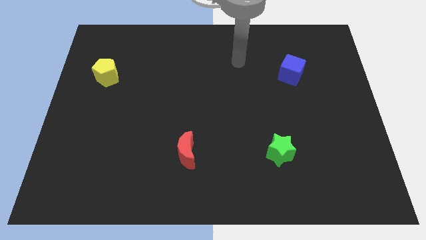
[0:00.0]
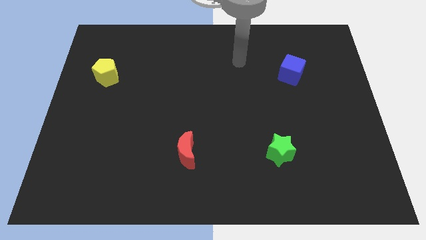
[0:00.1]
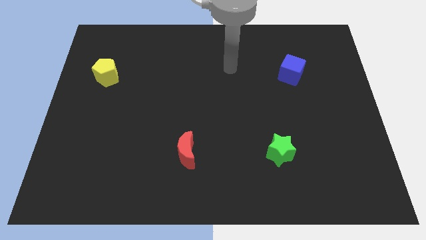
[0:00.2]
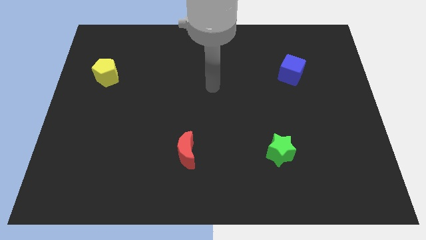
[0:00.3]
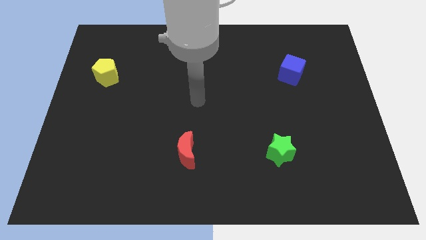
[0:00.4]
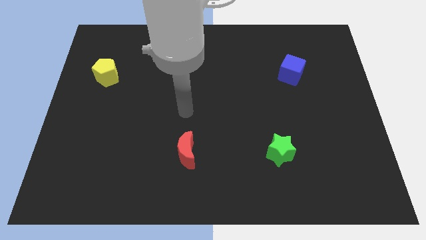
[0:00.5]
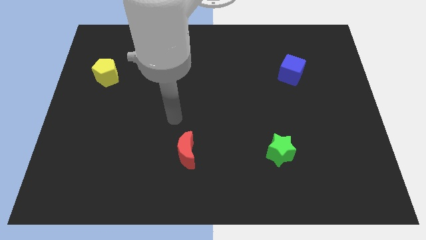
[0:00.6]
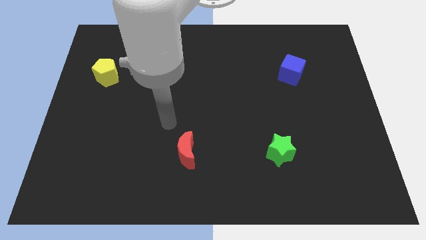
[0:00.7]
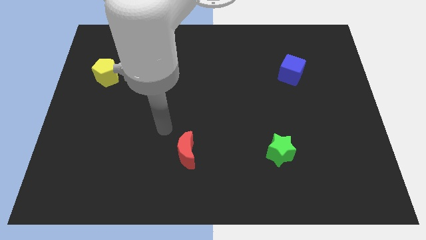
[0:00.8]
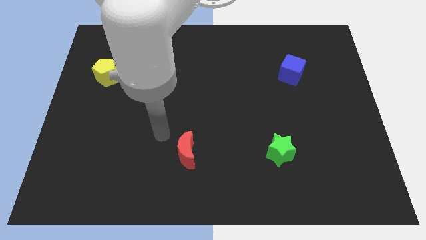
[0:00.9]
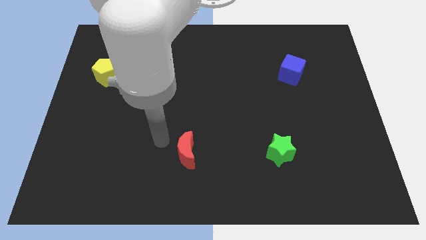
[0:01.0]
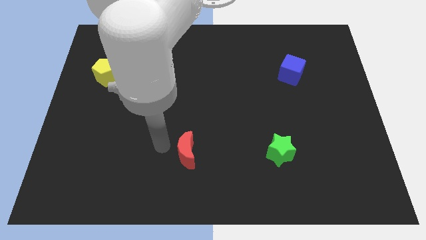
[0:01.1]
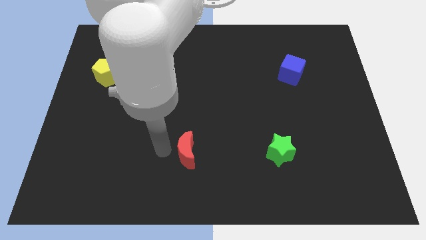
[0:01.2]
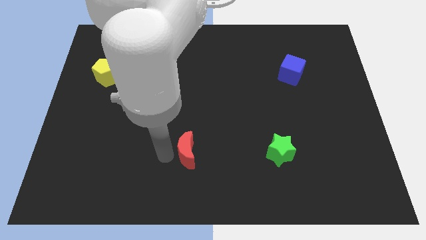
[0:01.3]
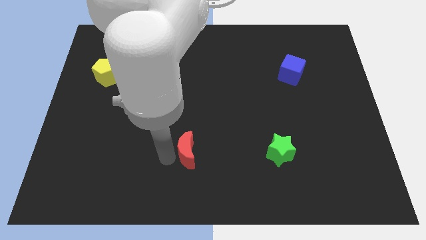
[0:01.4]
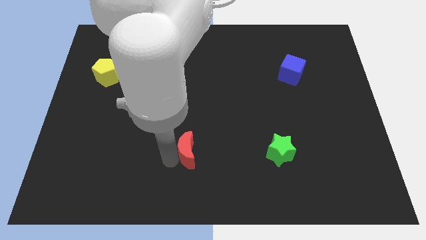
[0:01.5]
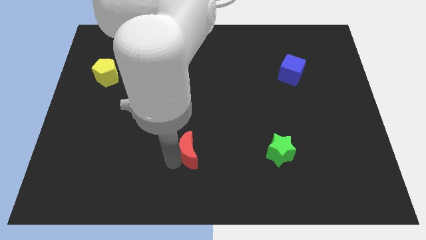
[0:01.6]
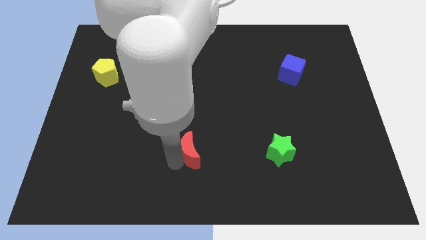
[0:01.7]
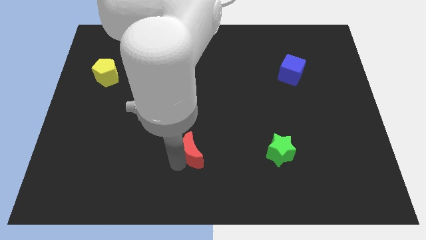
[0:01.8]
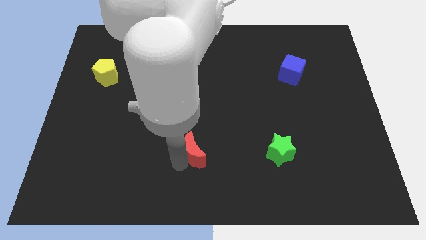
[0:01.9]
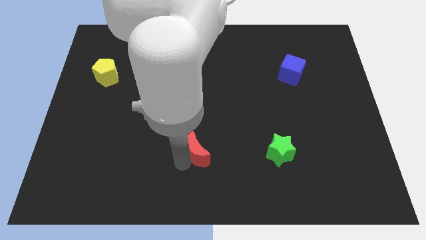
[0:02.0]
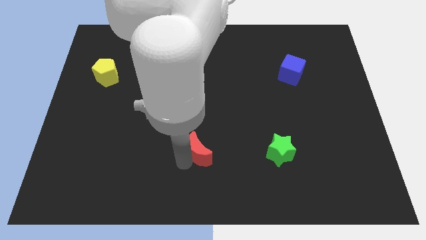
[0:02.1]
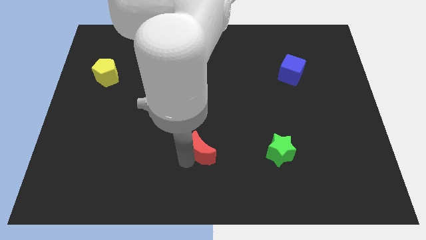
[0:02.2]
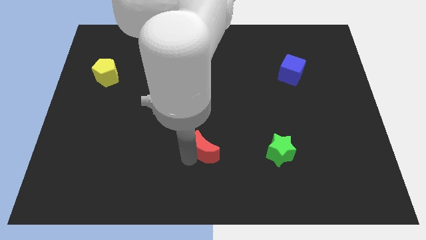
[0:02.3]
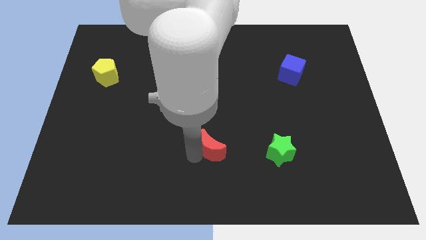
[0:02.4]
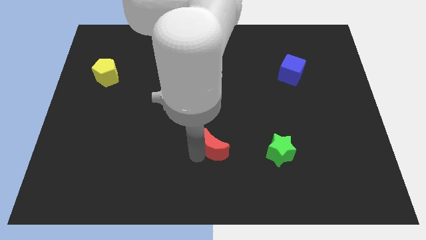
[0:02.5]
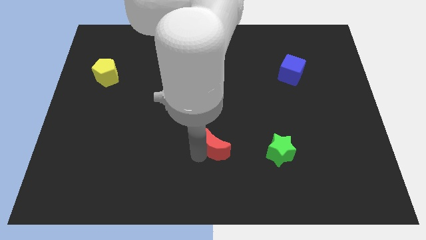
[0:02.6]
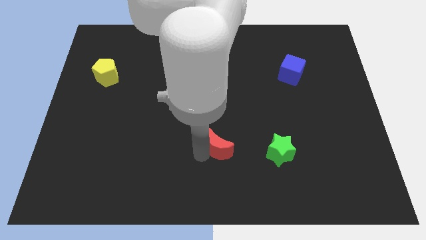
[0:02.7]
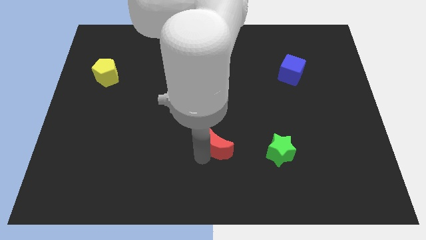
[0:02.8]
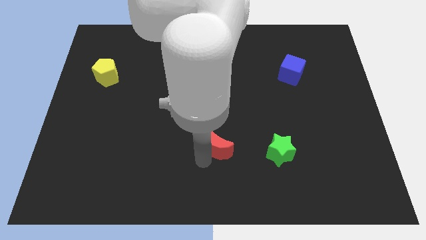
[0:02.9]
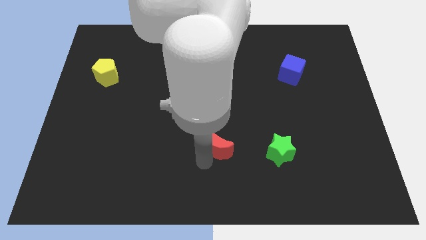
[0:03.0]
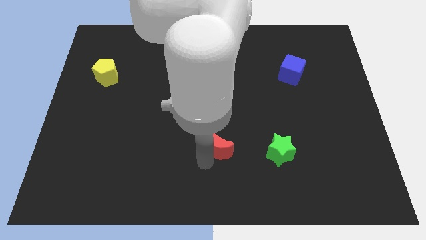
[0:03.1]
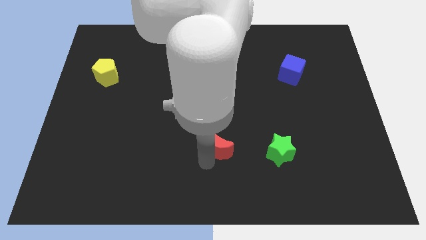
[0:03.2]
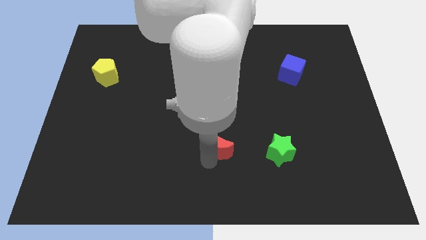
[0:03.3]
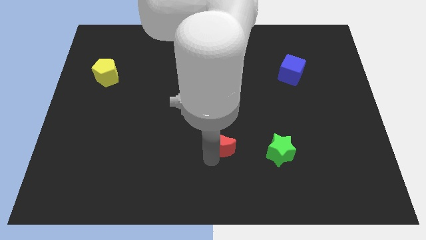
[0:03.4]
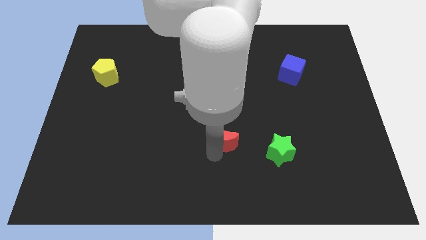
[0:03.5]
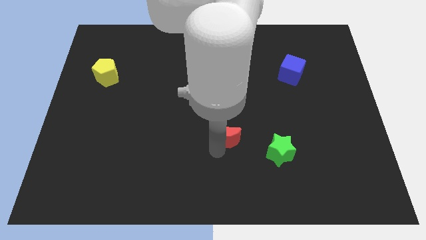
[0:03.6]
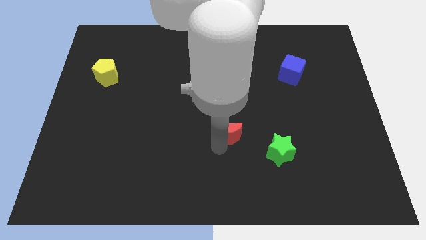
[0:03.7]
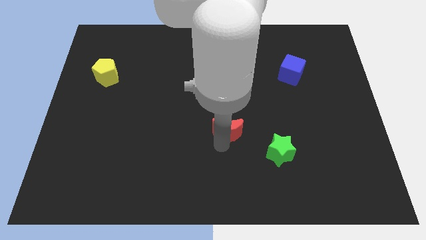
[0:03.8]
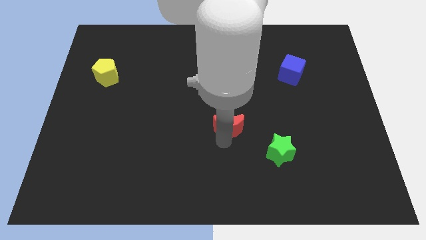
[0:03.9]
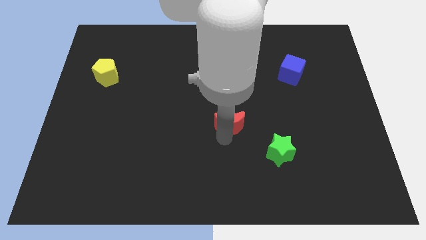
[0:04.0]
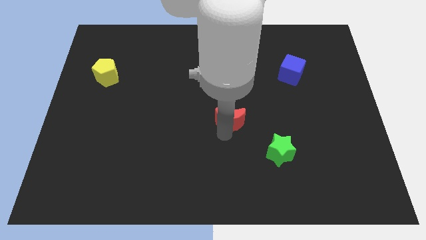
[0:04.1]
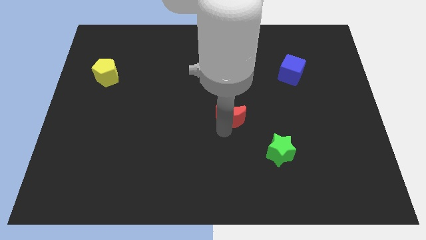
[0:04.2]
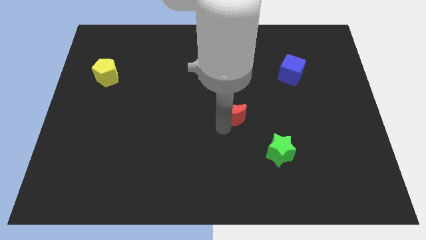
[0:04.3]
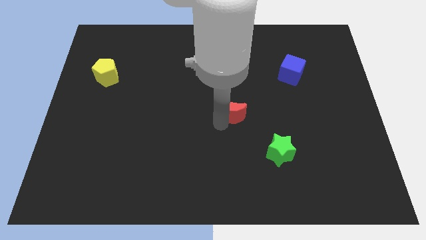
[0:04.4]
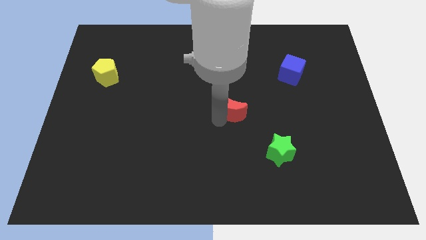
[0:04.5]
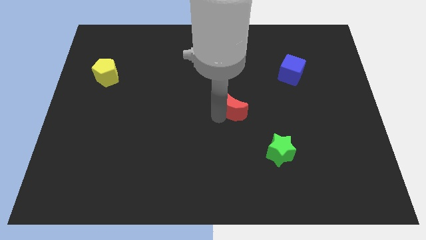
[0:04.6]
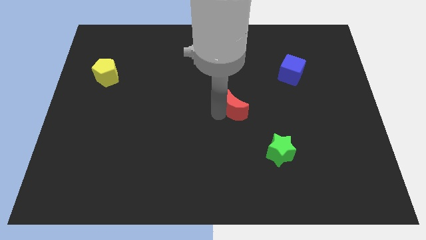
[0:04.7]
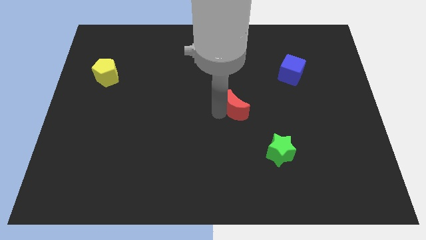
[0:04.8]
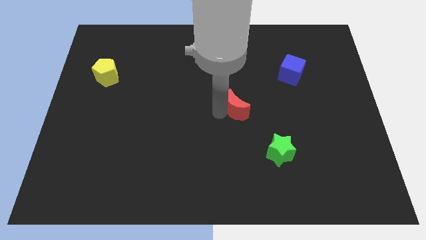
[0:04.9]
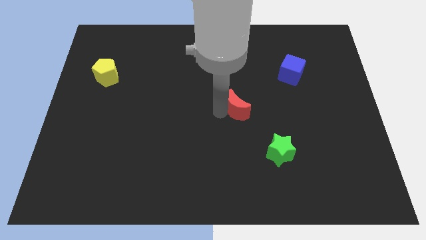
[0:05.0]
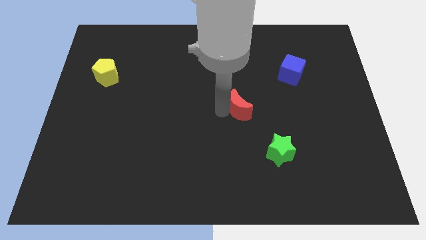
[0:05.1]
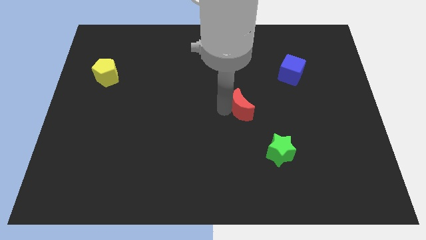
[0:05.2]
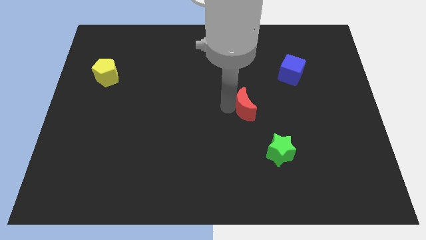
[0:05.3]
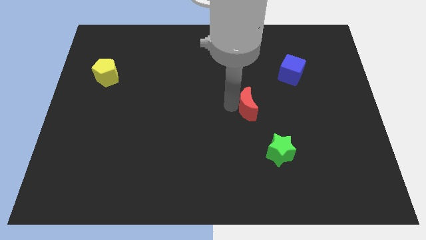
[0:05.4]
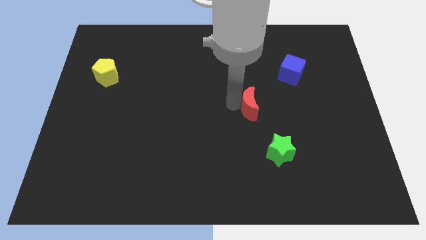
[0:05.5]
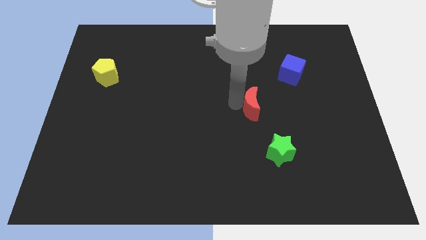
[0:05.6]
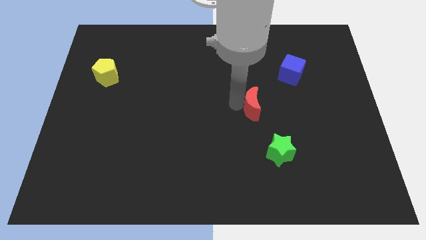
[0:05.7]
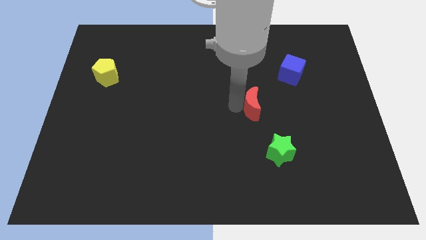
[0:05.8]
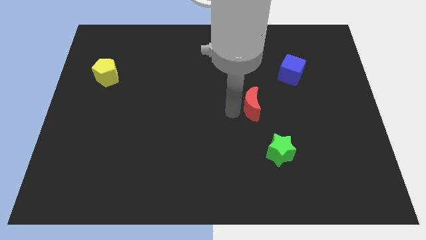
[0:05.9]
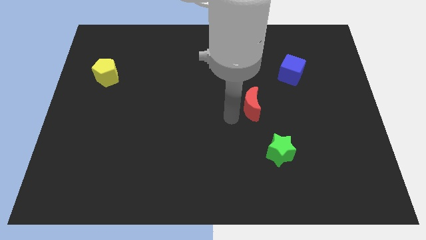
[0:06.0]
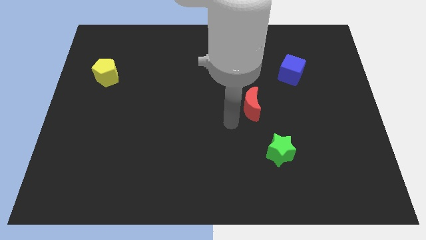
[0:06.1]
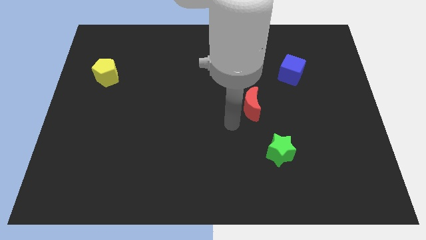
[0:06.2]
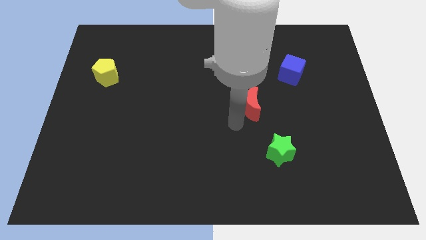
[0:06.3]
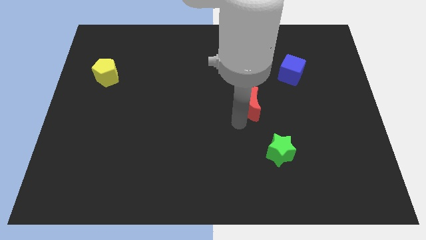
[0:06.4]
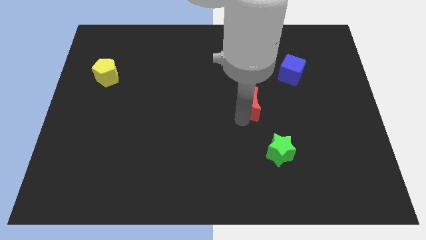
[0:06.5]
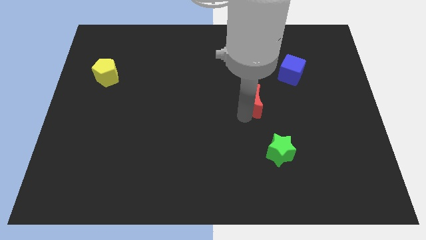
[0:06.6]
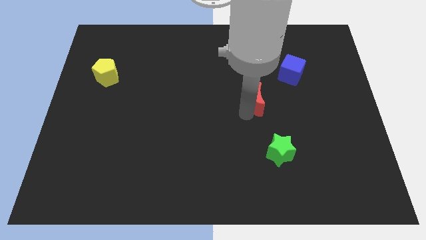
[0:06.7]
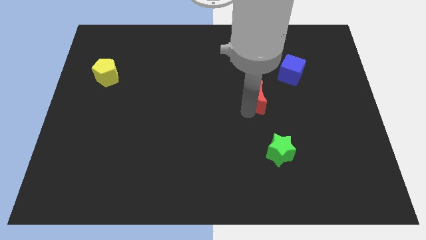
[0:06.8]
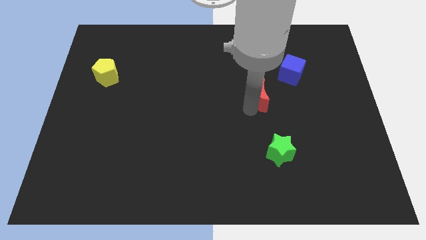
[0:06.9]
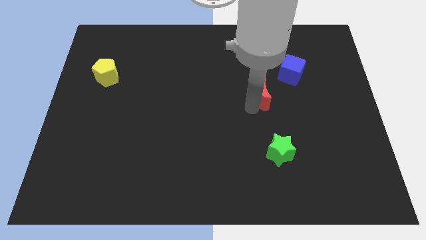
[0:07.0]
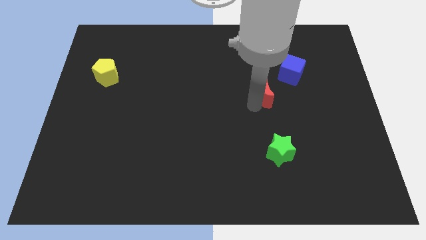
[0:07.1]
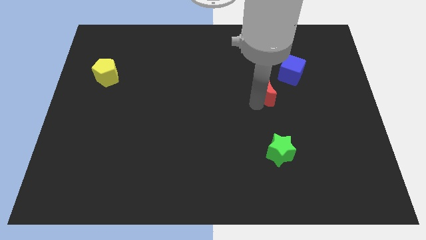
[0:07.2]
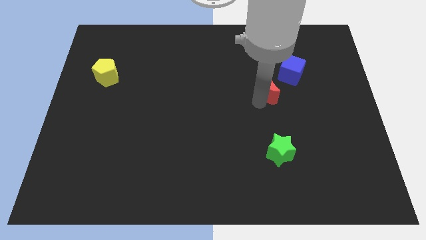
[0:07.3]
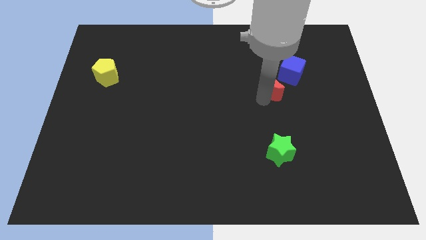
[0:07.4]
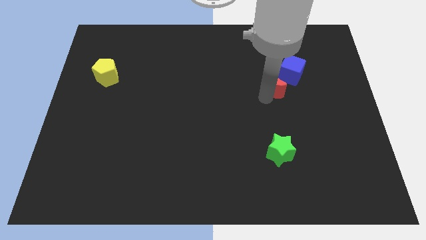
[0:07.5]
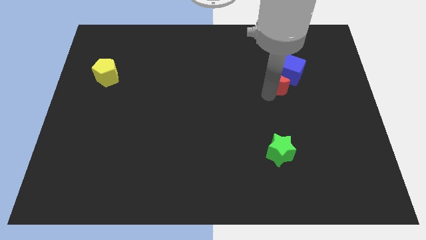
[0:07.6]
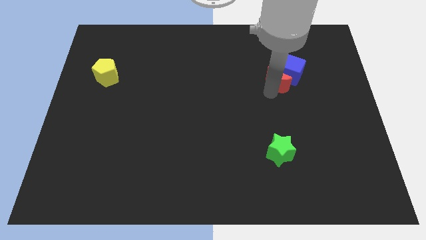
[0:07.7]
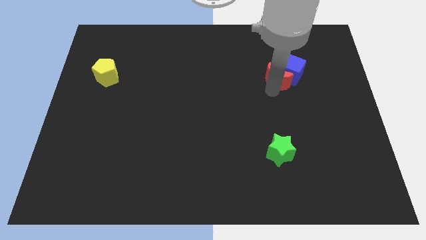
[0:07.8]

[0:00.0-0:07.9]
slide the moon close to the blue cube

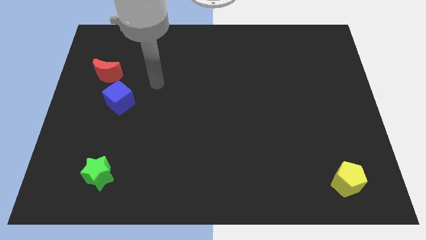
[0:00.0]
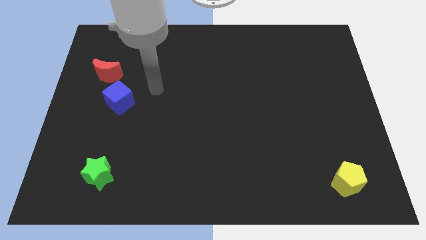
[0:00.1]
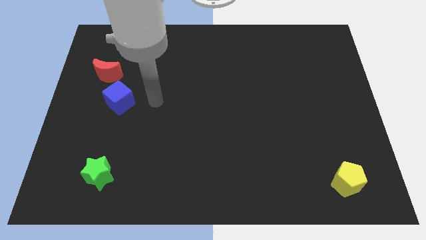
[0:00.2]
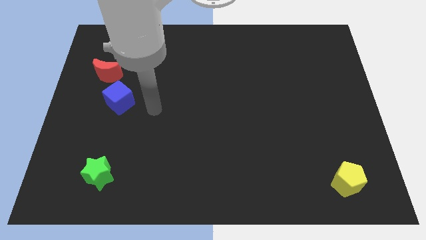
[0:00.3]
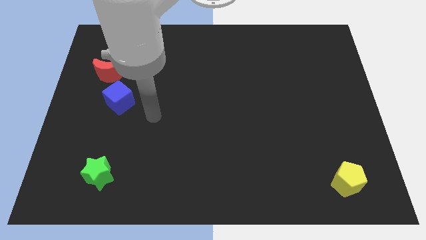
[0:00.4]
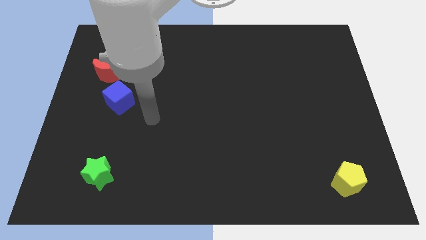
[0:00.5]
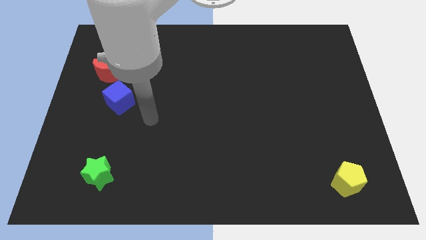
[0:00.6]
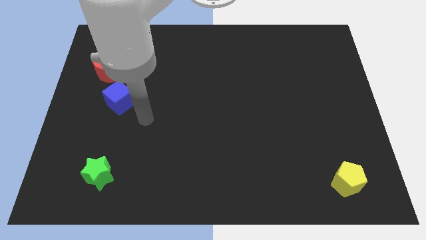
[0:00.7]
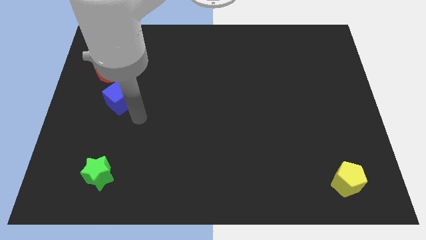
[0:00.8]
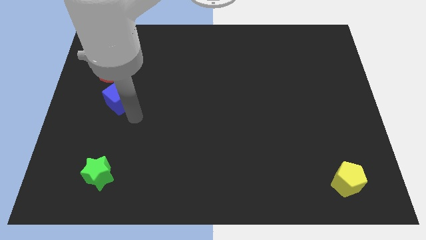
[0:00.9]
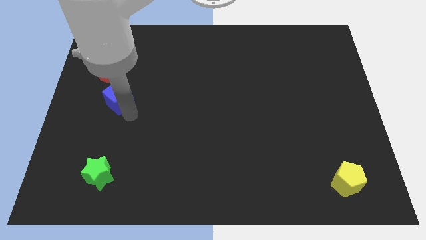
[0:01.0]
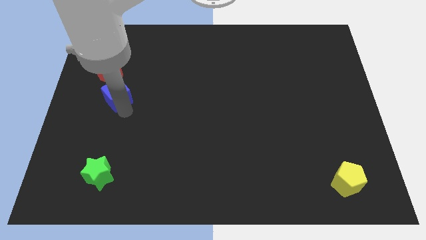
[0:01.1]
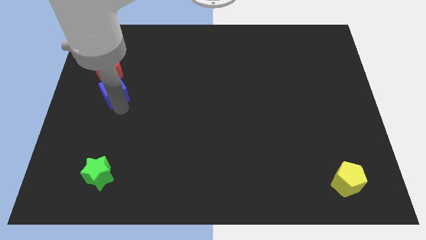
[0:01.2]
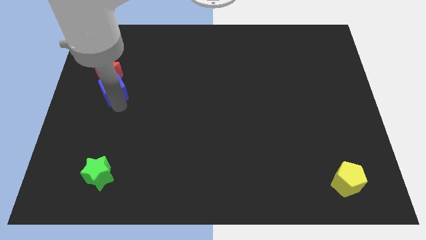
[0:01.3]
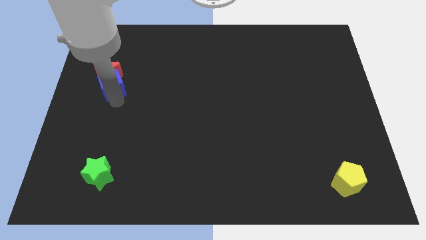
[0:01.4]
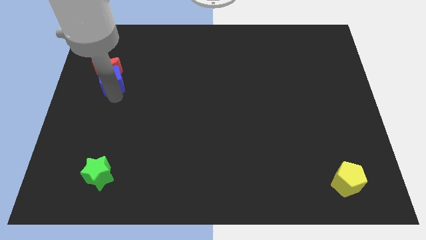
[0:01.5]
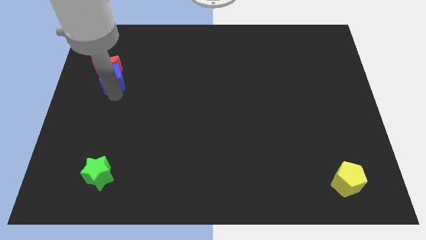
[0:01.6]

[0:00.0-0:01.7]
push the blue block next to the red moon
